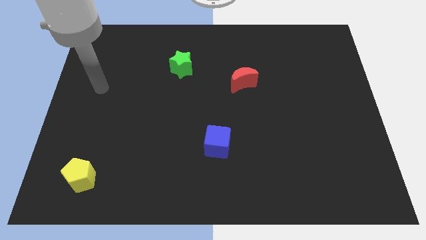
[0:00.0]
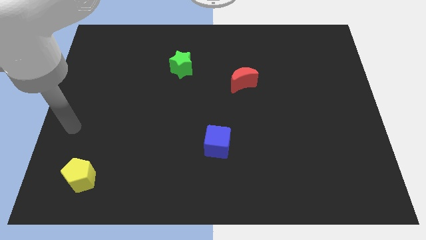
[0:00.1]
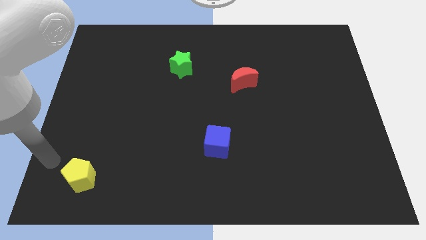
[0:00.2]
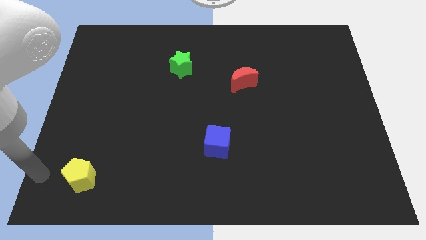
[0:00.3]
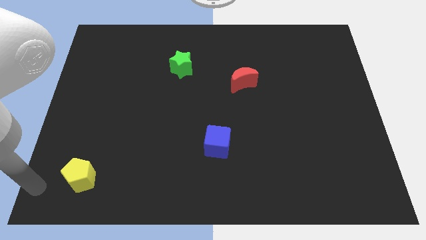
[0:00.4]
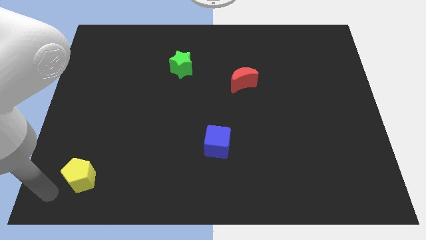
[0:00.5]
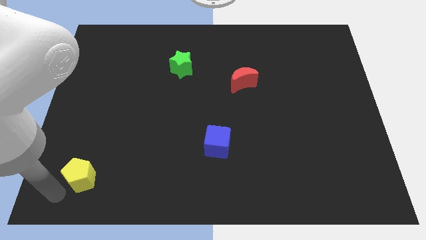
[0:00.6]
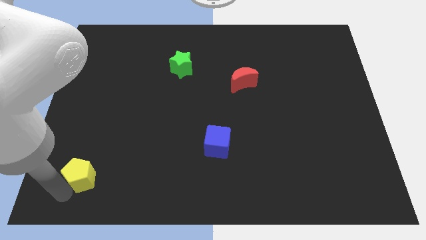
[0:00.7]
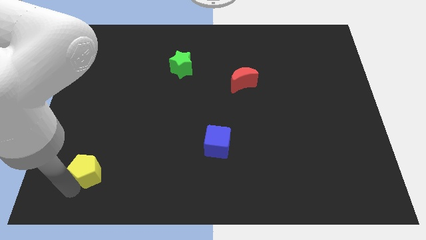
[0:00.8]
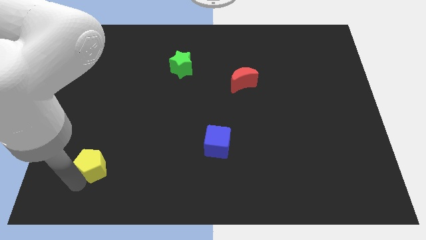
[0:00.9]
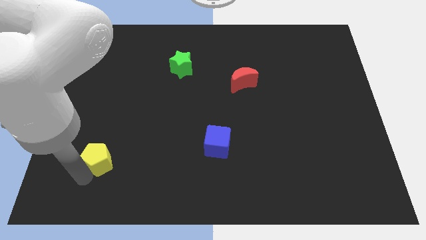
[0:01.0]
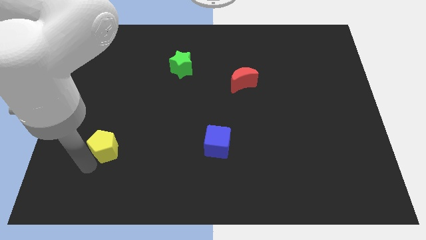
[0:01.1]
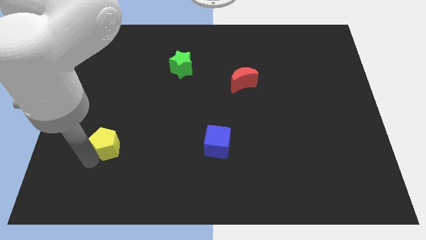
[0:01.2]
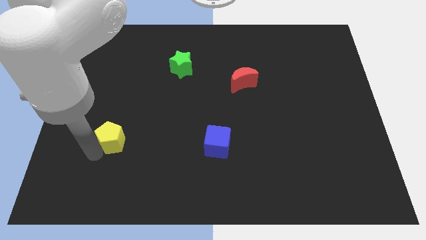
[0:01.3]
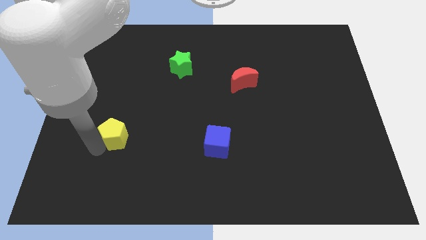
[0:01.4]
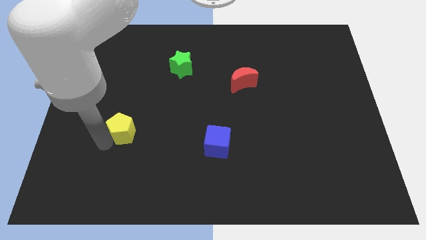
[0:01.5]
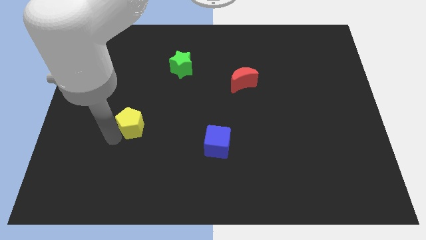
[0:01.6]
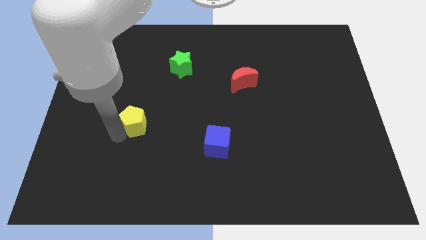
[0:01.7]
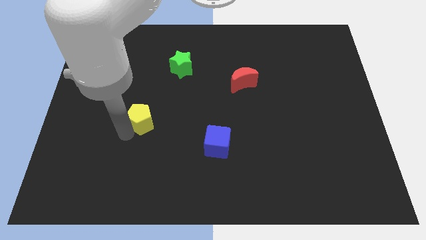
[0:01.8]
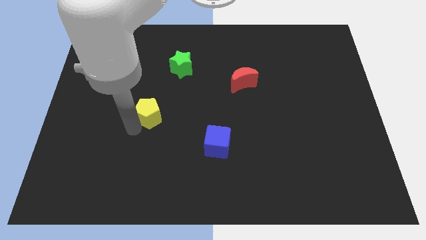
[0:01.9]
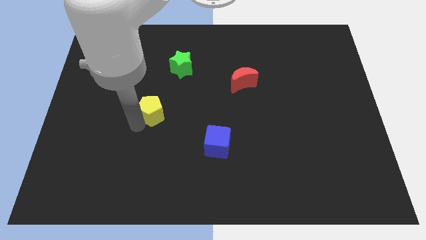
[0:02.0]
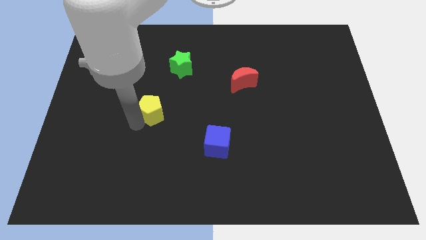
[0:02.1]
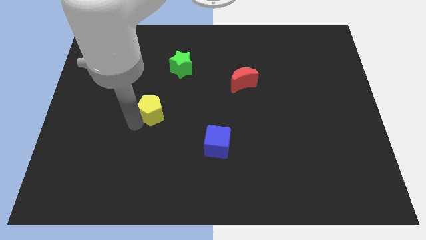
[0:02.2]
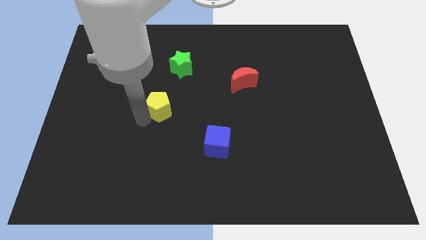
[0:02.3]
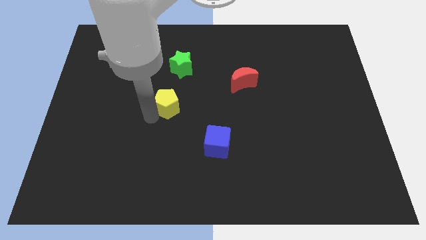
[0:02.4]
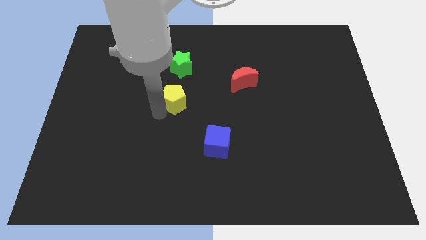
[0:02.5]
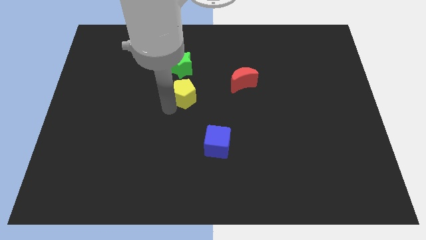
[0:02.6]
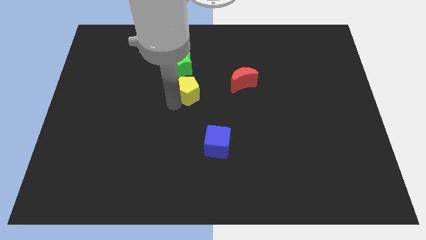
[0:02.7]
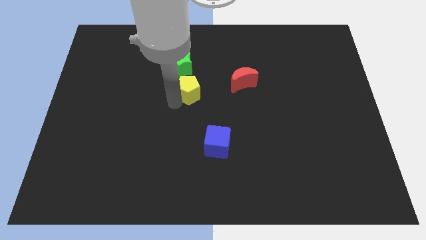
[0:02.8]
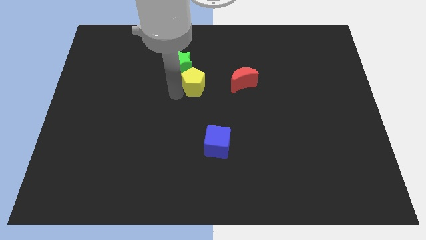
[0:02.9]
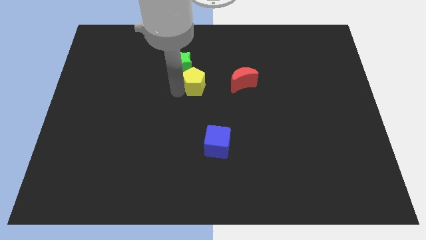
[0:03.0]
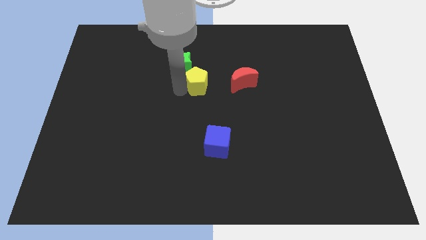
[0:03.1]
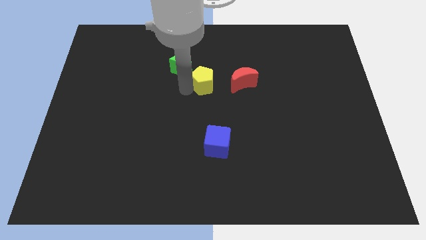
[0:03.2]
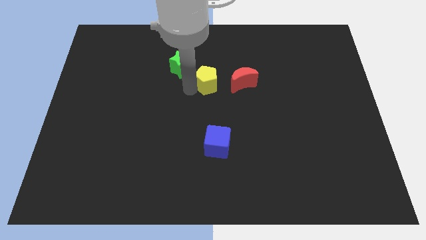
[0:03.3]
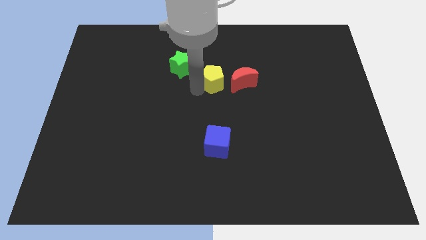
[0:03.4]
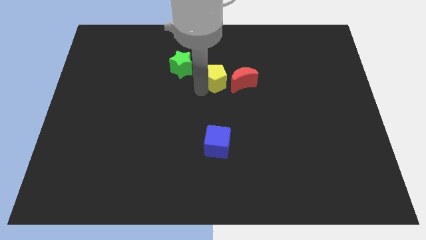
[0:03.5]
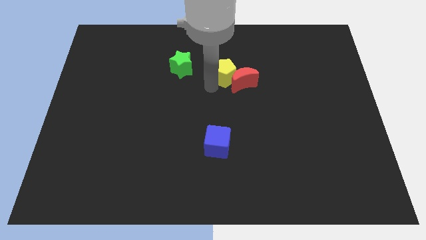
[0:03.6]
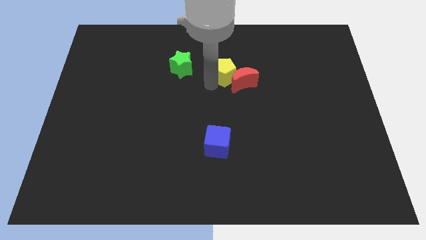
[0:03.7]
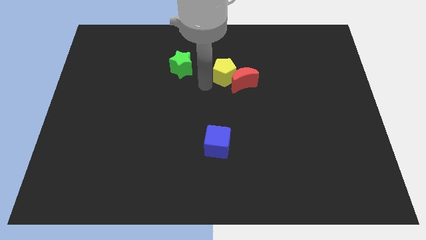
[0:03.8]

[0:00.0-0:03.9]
put the yellow block close to the red block

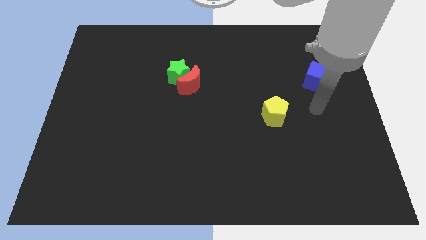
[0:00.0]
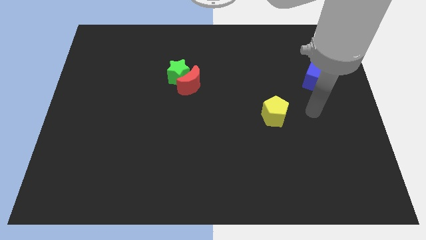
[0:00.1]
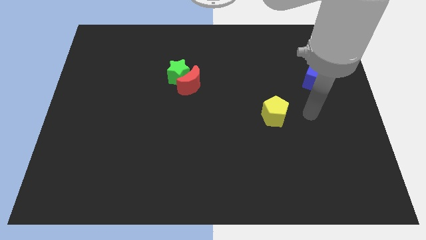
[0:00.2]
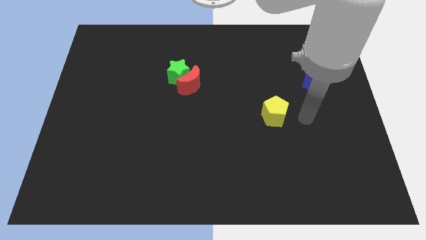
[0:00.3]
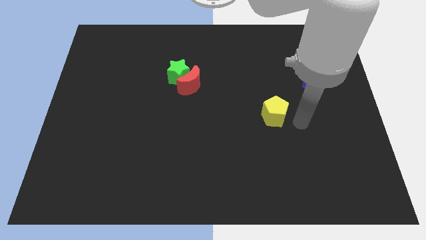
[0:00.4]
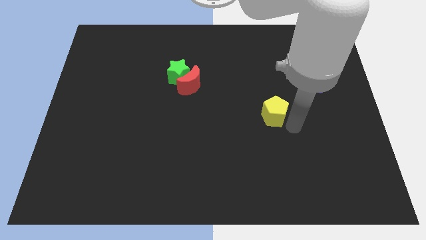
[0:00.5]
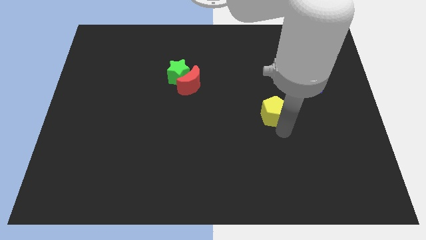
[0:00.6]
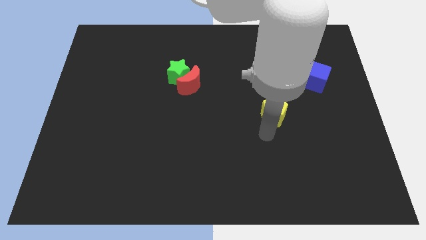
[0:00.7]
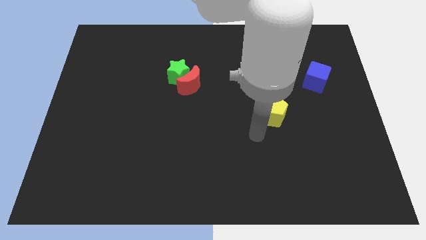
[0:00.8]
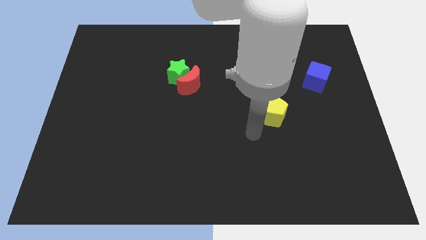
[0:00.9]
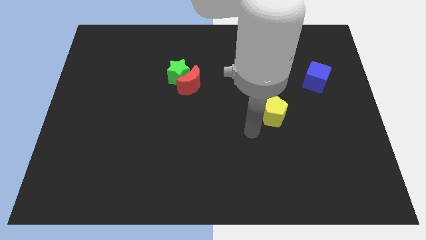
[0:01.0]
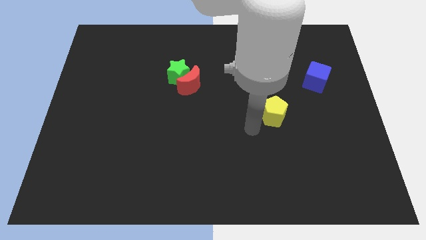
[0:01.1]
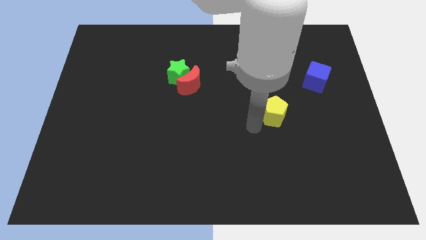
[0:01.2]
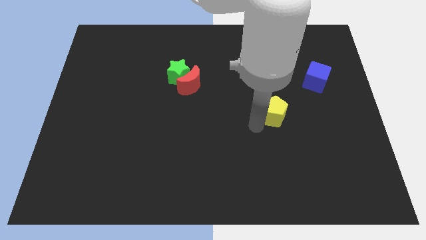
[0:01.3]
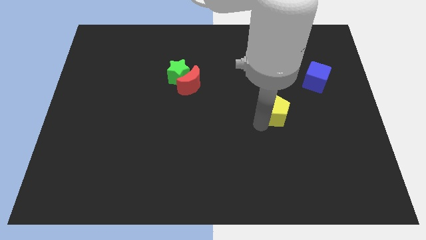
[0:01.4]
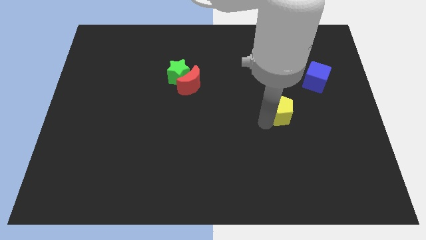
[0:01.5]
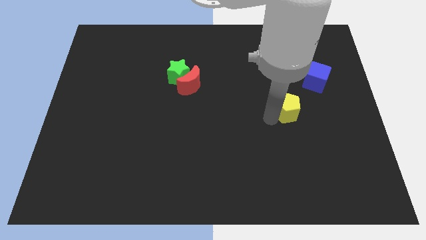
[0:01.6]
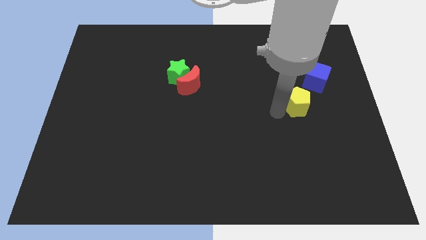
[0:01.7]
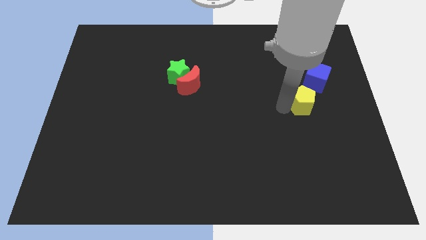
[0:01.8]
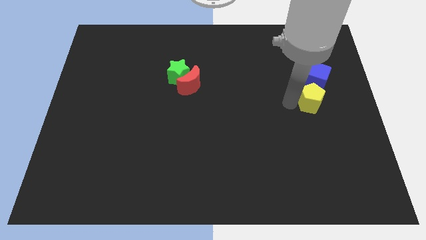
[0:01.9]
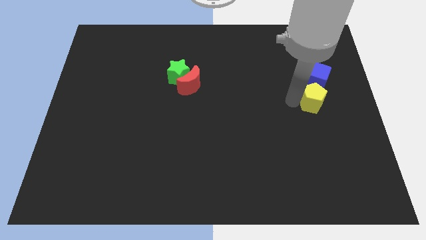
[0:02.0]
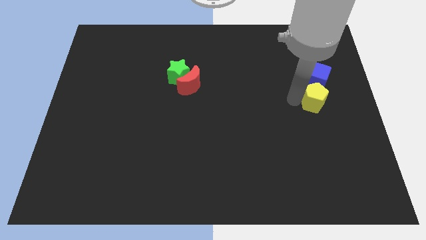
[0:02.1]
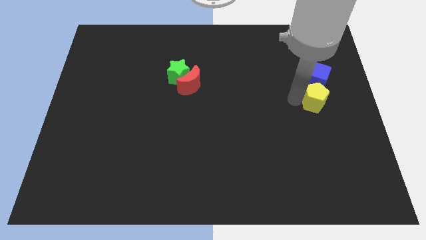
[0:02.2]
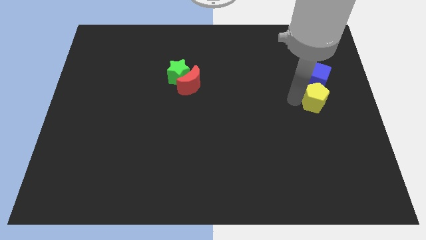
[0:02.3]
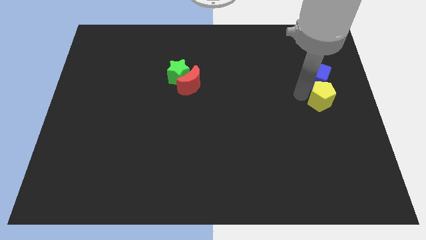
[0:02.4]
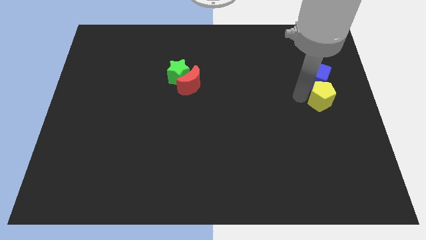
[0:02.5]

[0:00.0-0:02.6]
put the pentagon next to the blue cube

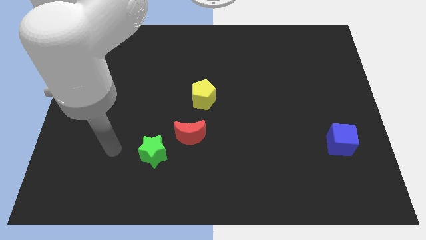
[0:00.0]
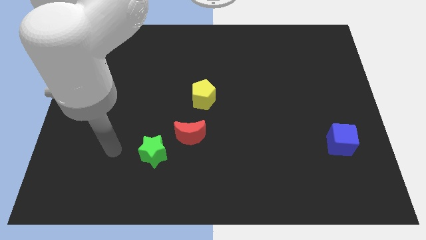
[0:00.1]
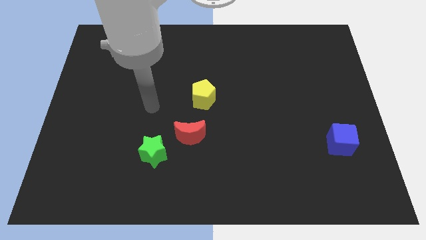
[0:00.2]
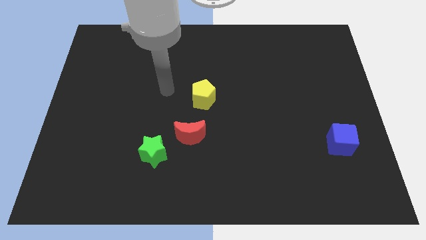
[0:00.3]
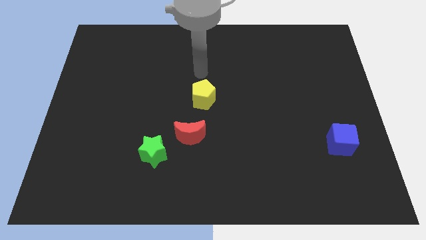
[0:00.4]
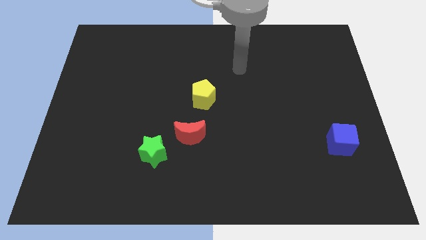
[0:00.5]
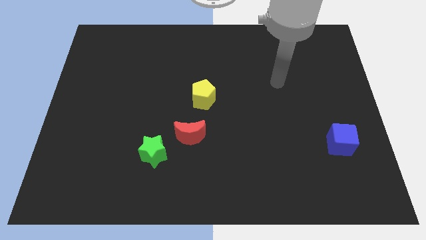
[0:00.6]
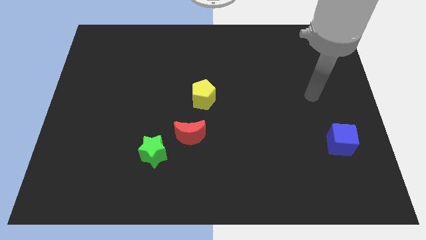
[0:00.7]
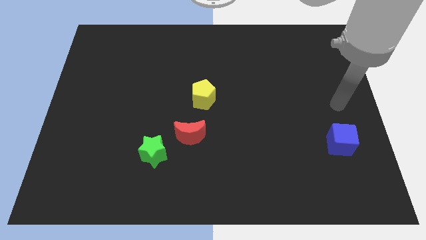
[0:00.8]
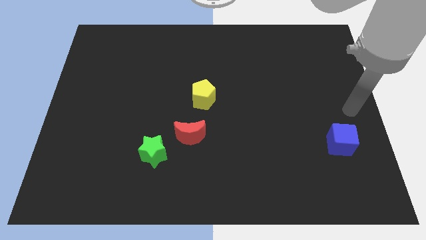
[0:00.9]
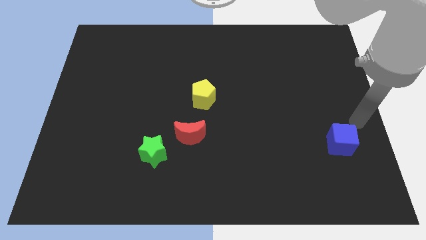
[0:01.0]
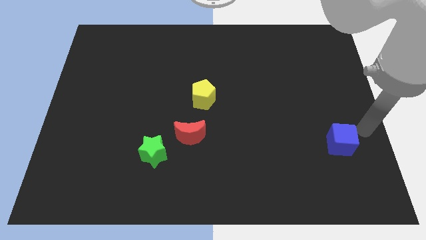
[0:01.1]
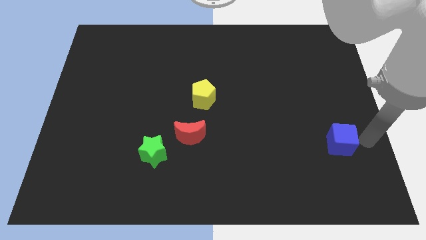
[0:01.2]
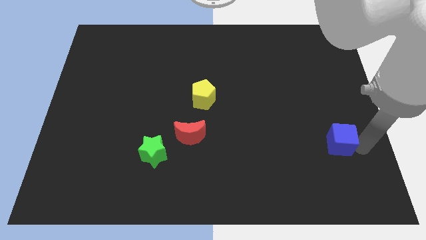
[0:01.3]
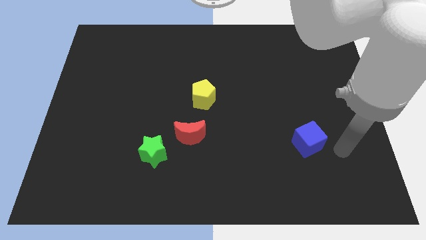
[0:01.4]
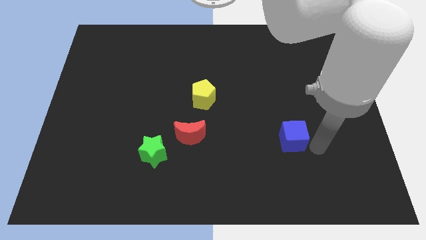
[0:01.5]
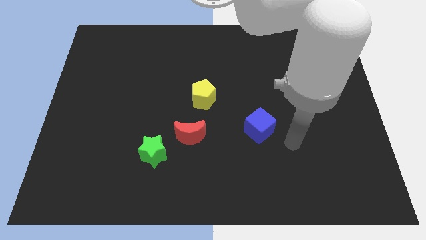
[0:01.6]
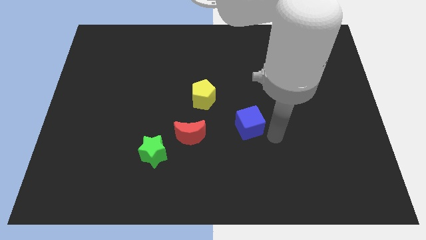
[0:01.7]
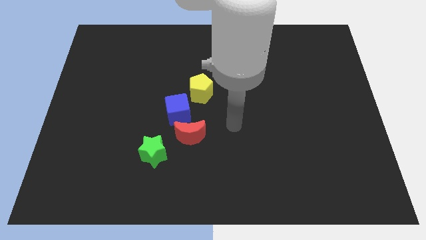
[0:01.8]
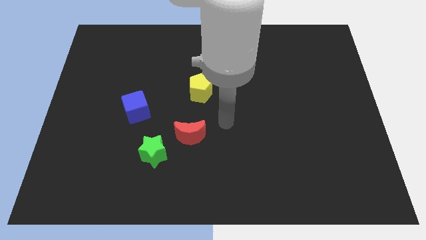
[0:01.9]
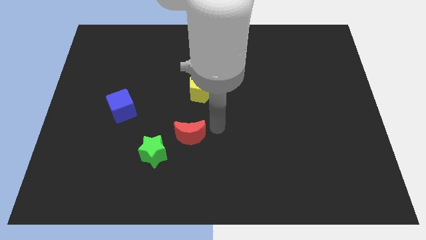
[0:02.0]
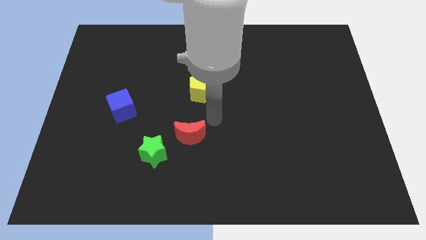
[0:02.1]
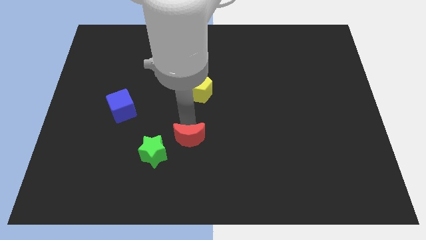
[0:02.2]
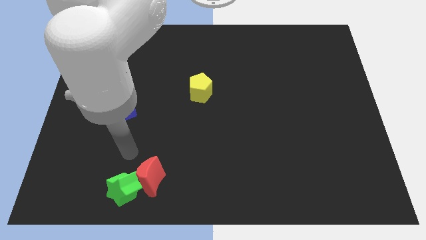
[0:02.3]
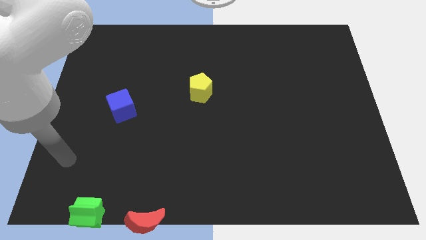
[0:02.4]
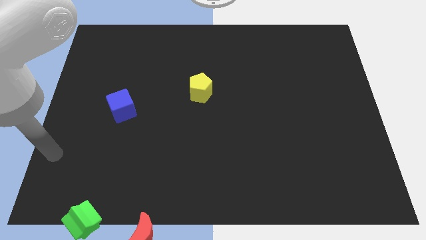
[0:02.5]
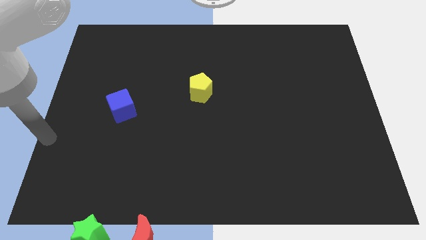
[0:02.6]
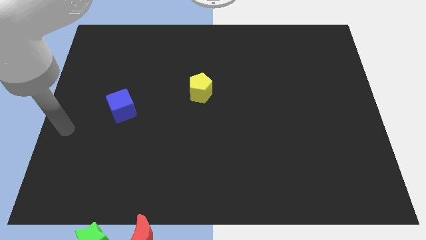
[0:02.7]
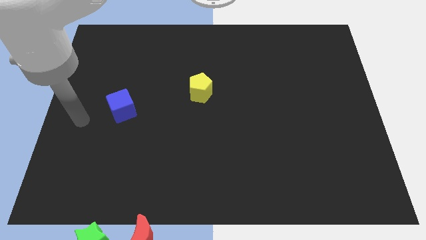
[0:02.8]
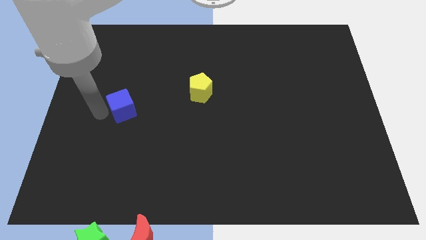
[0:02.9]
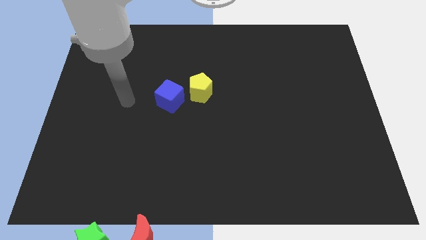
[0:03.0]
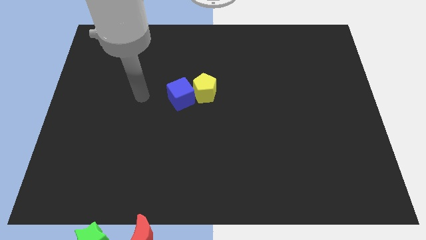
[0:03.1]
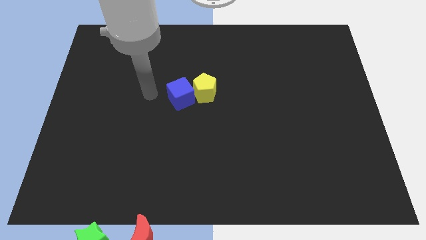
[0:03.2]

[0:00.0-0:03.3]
push the blue cube close to the yellow pentagon
